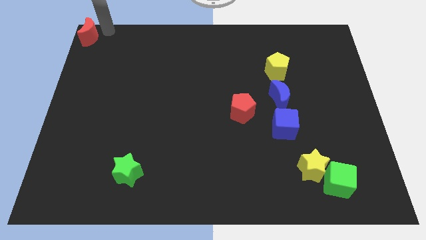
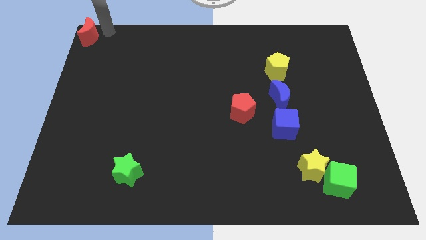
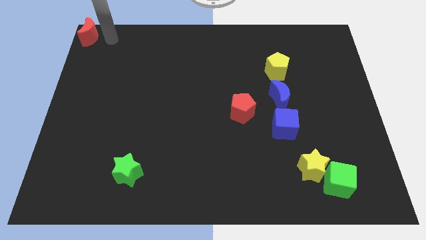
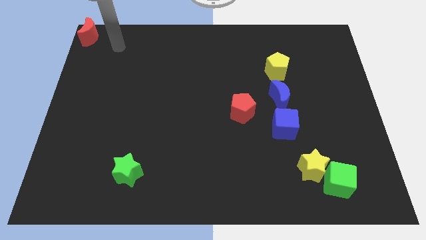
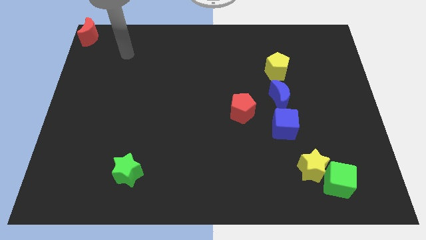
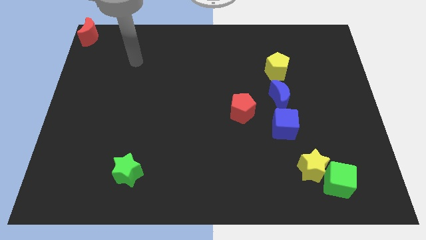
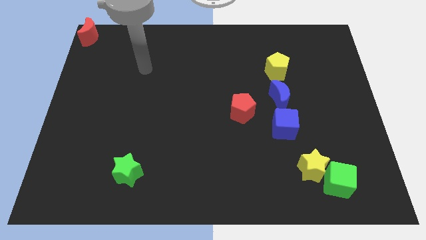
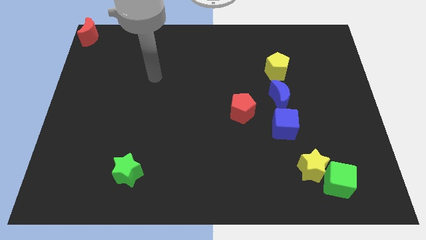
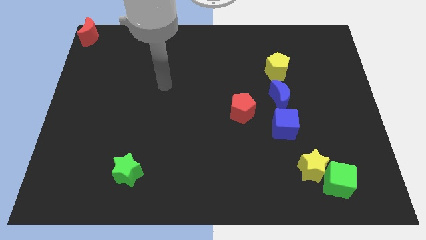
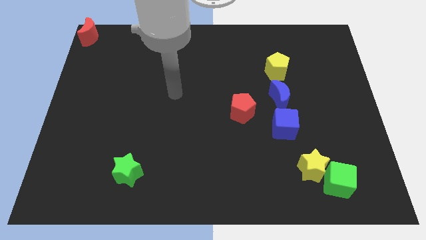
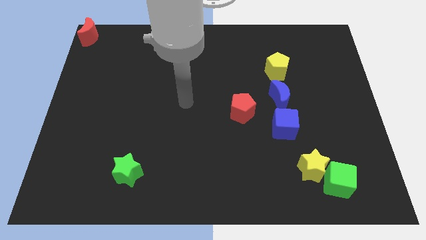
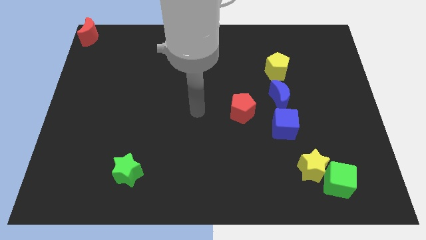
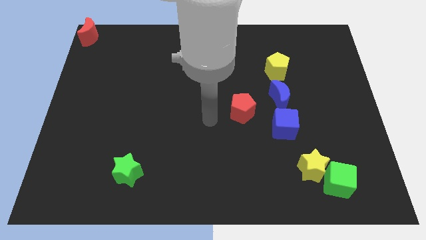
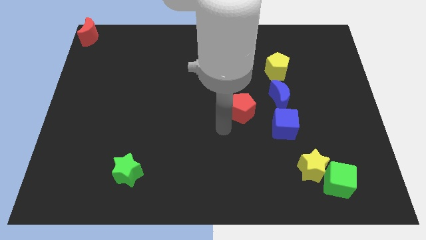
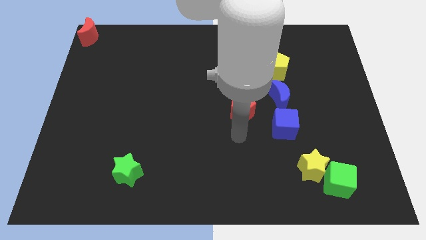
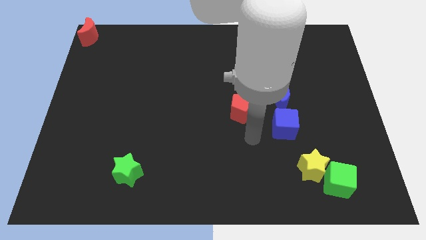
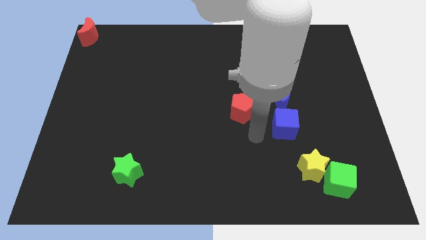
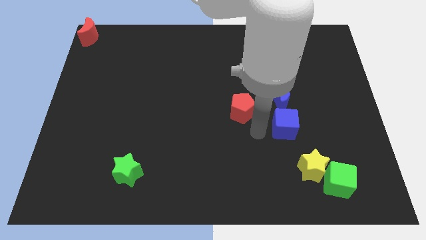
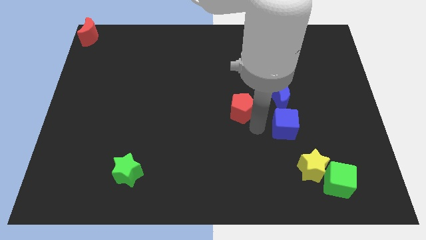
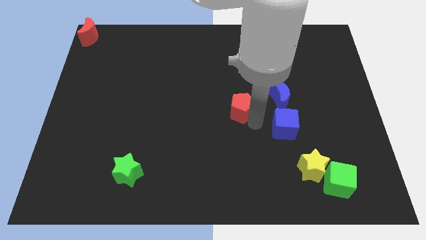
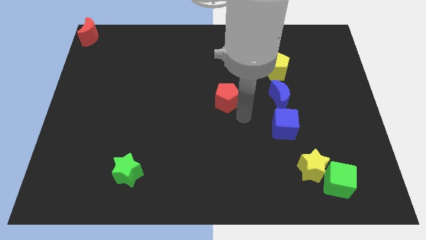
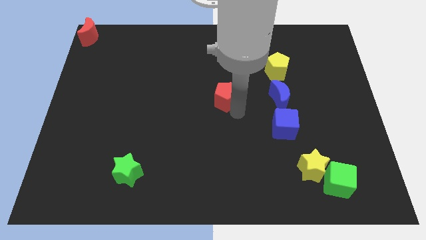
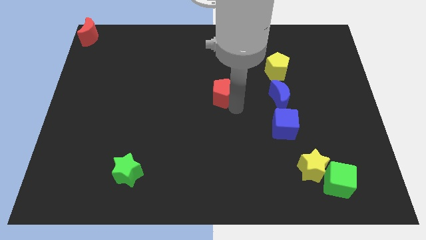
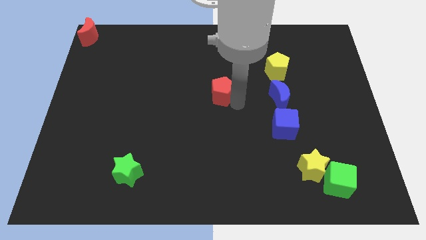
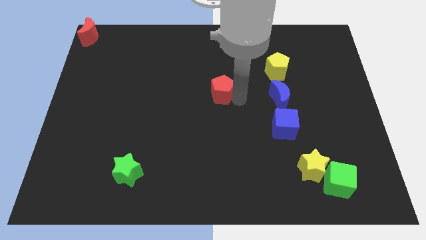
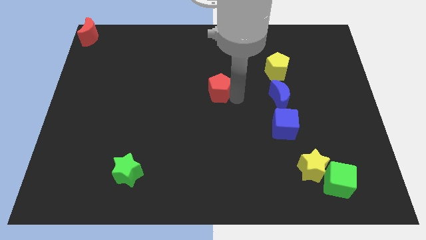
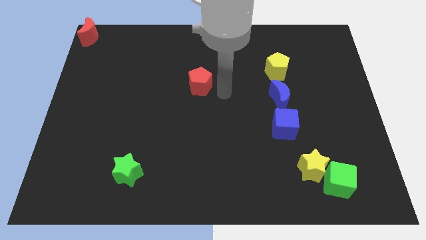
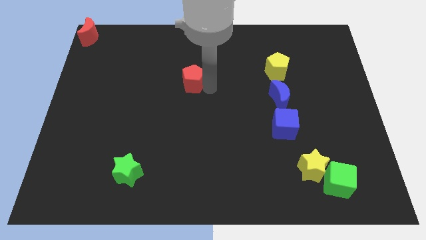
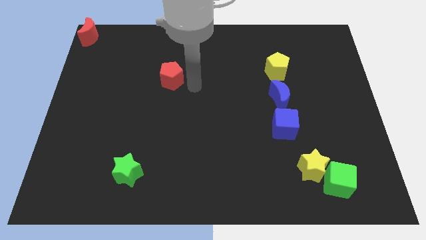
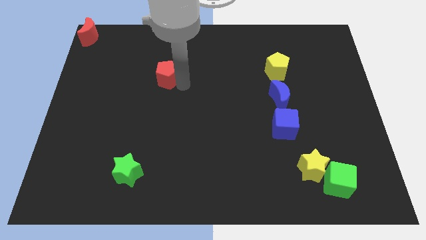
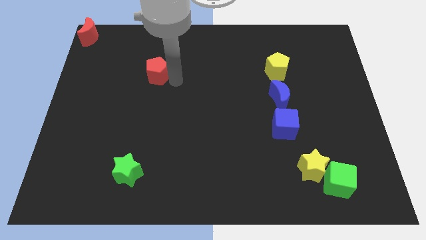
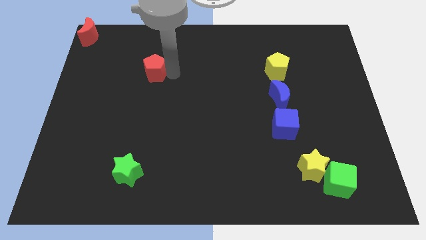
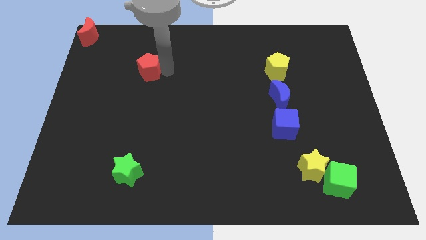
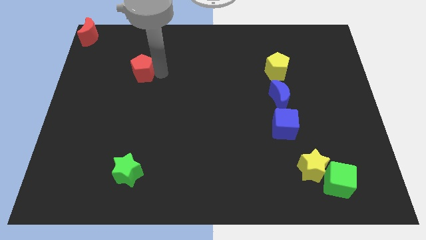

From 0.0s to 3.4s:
move the red pentagon above the green star

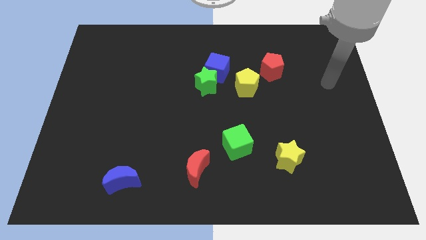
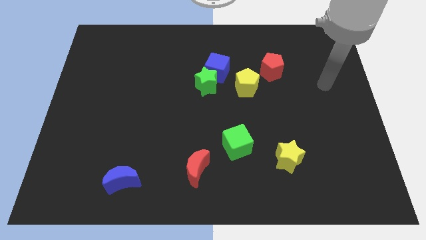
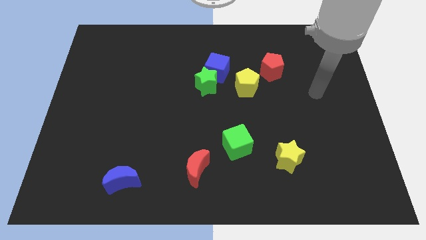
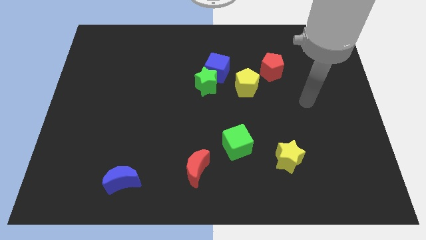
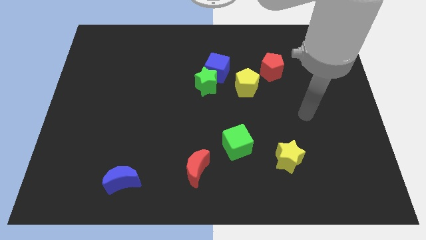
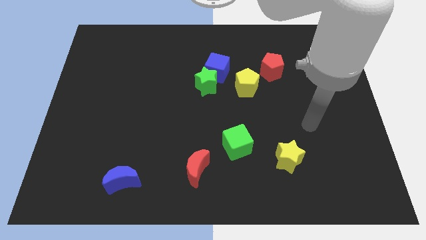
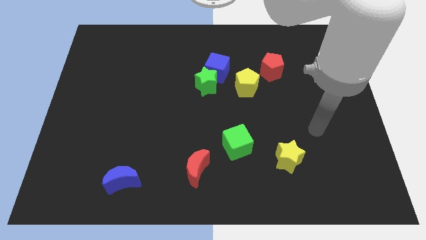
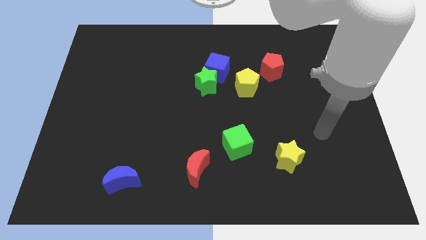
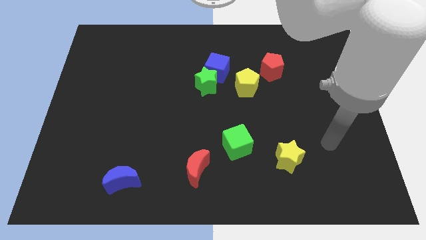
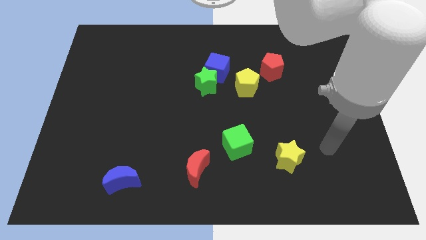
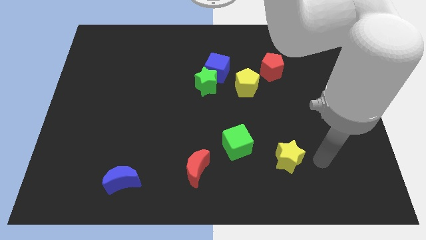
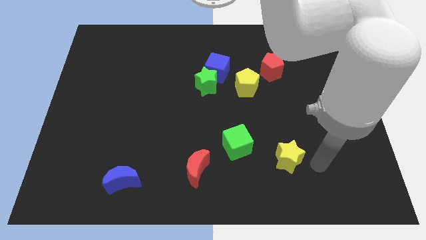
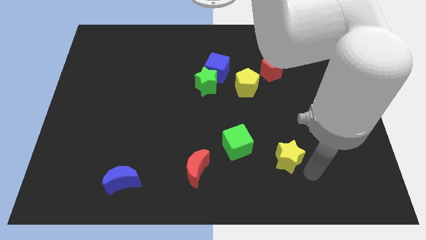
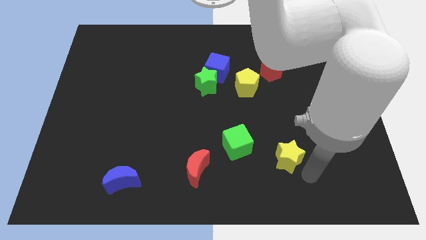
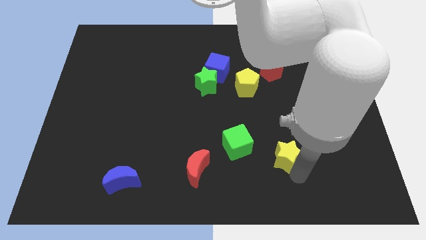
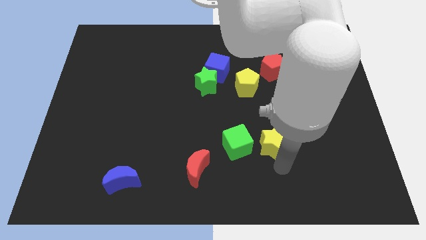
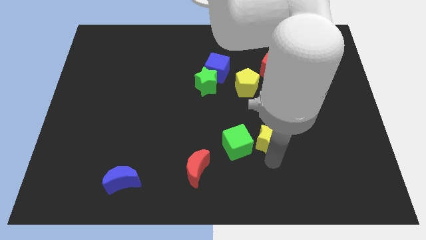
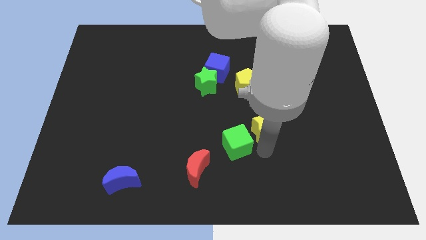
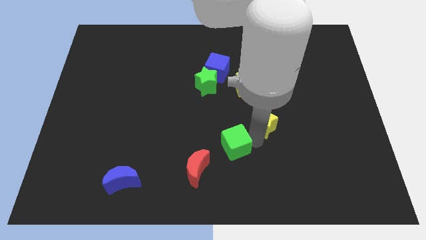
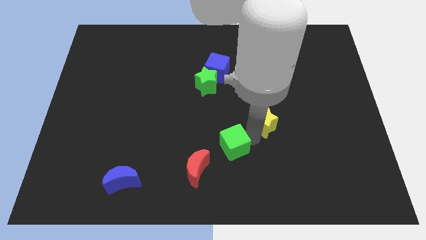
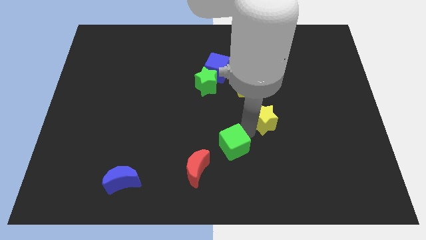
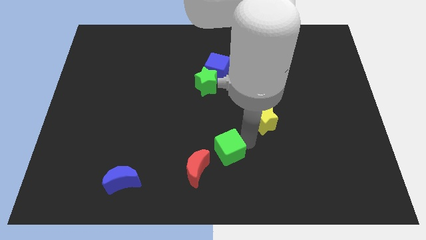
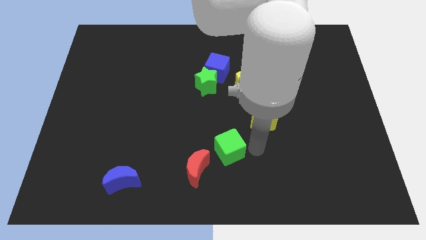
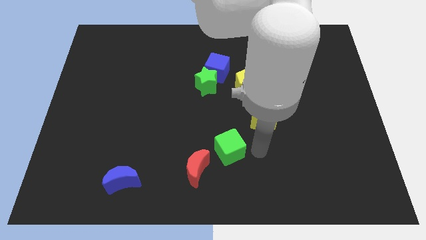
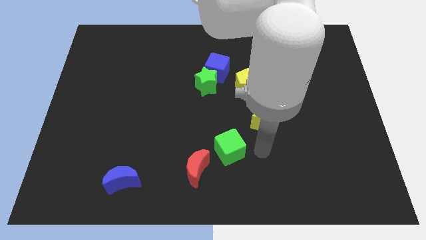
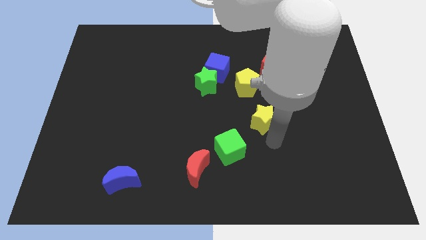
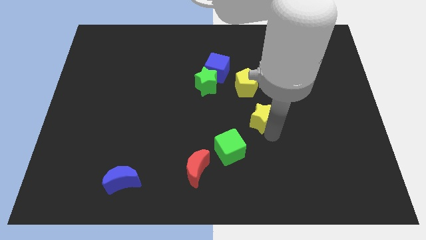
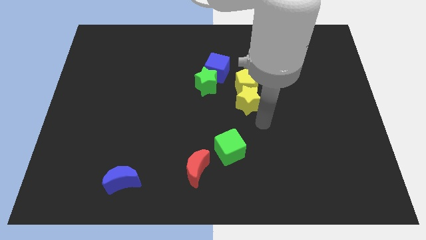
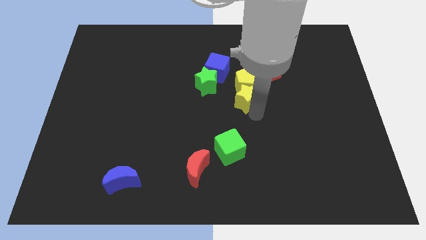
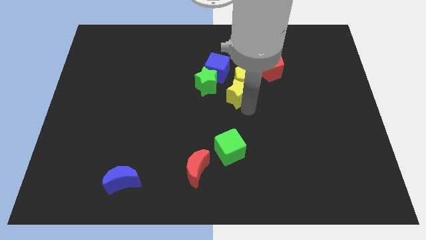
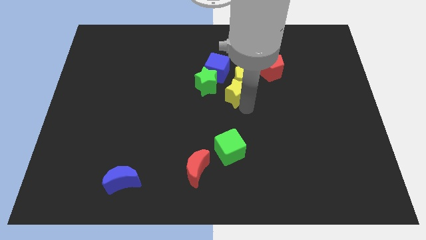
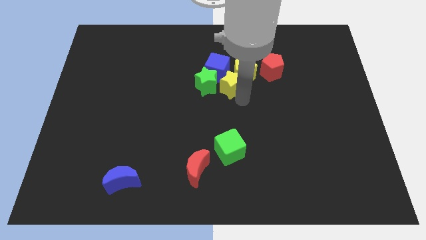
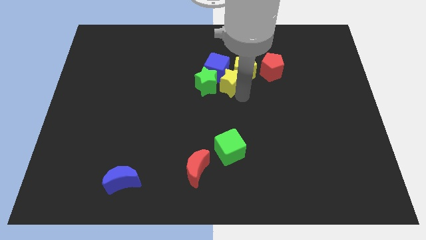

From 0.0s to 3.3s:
push the yellow pentagon into the group of blocks

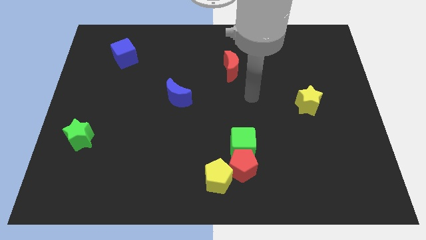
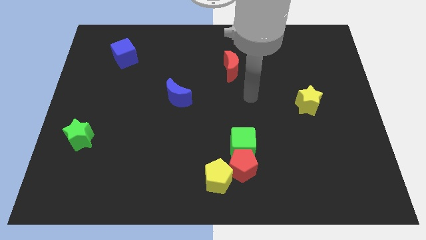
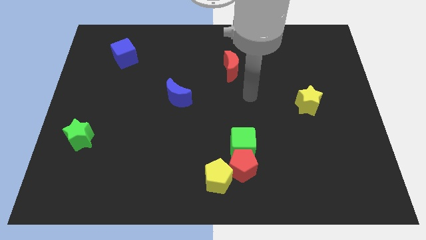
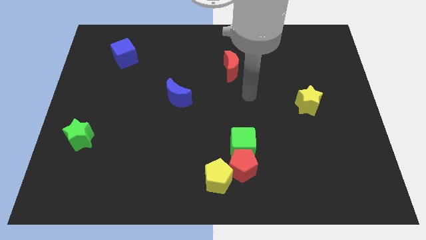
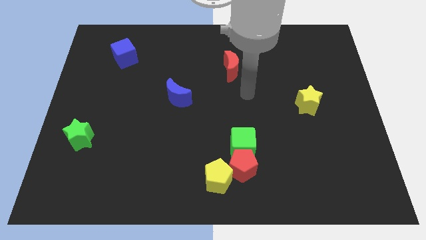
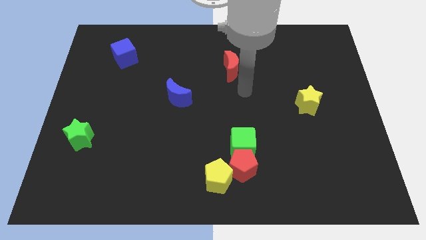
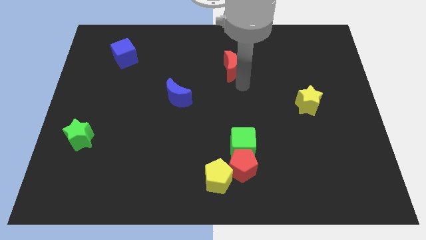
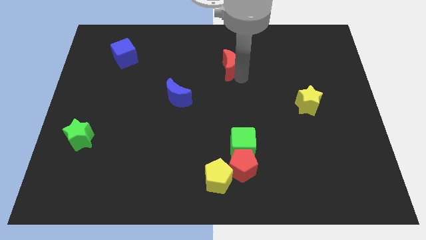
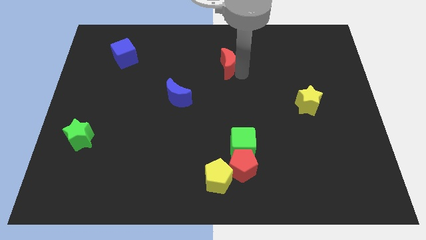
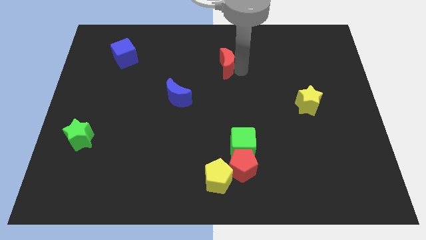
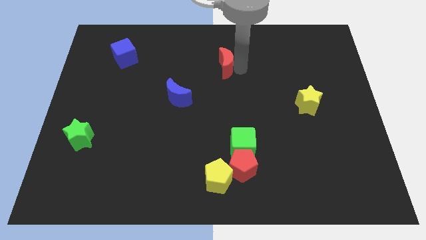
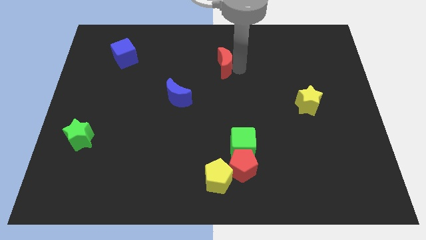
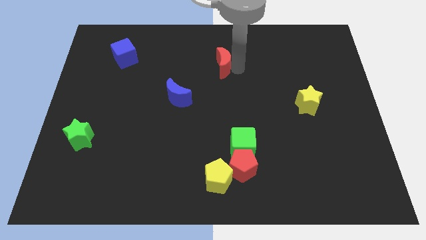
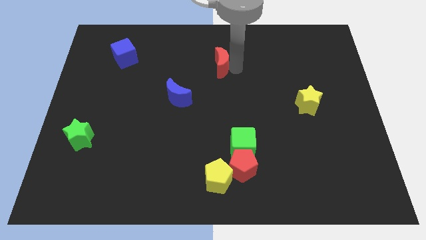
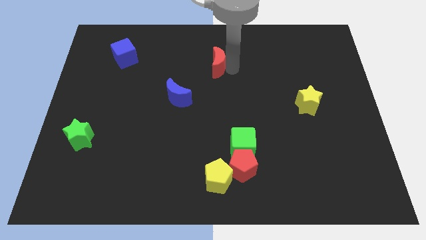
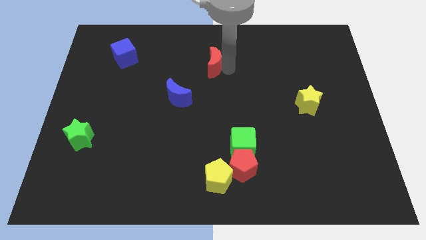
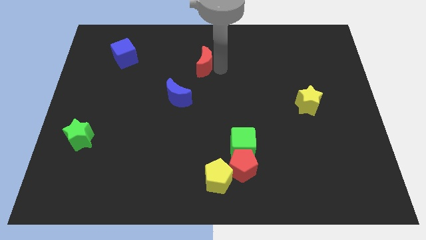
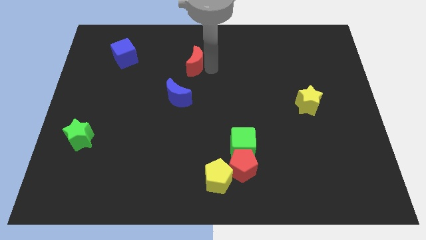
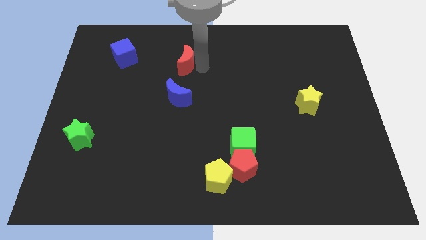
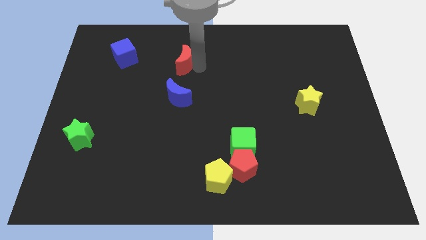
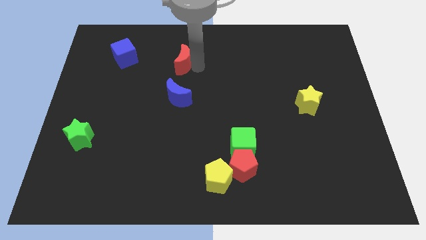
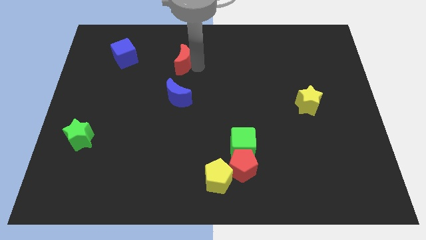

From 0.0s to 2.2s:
place the red crescent above the blue semicircle
